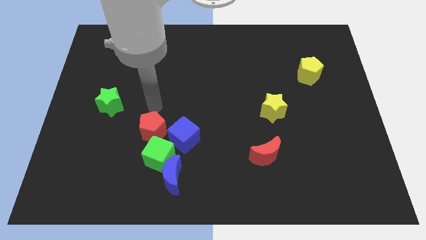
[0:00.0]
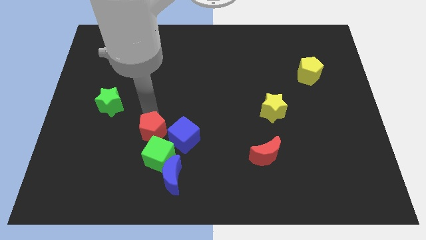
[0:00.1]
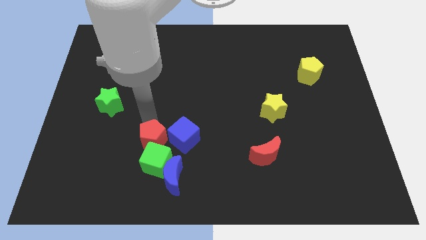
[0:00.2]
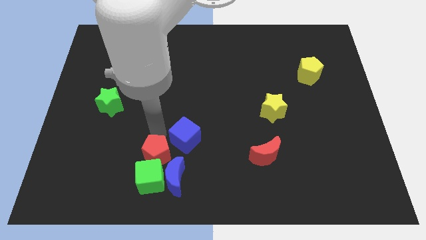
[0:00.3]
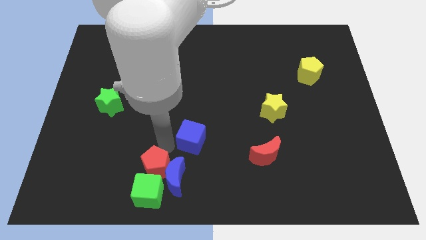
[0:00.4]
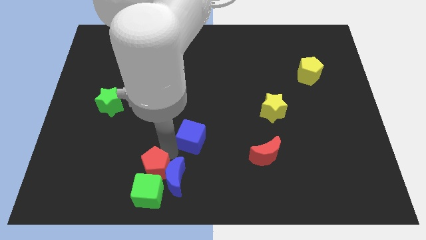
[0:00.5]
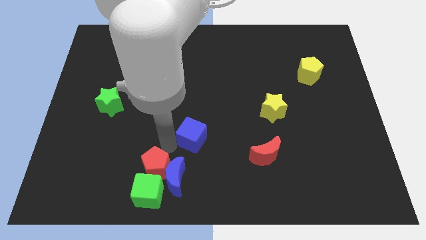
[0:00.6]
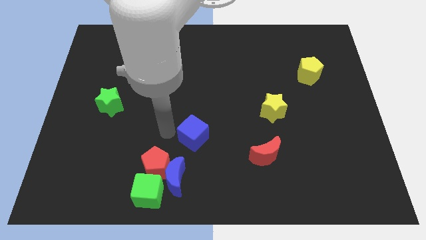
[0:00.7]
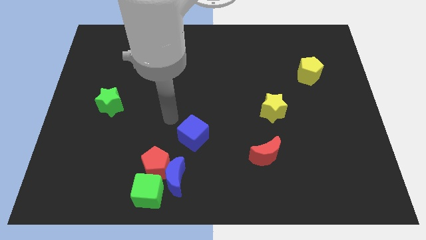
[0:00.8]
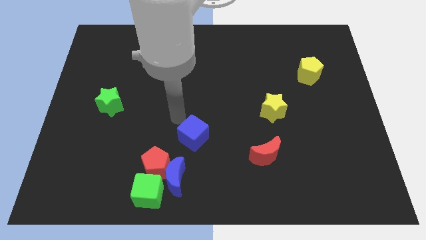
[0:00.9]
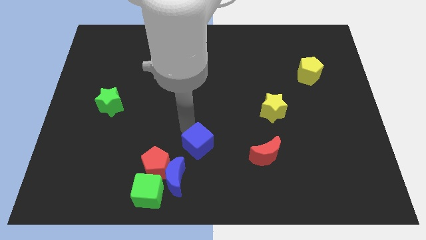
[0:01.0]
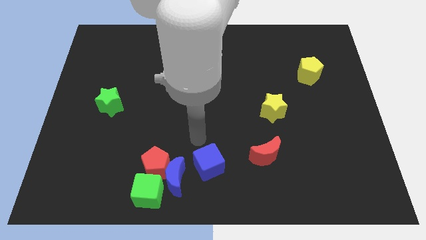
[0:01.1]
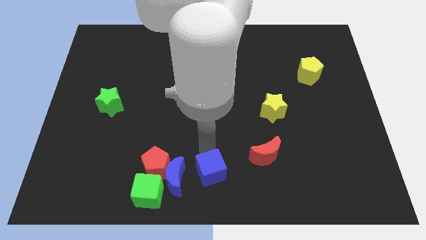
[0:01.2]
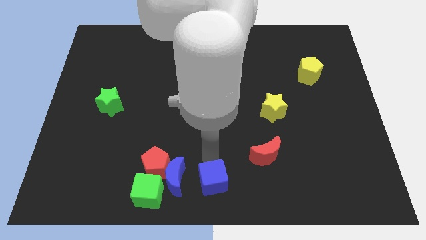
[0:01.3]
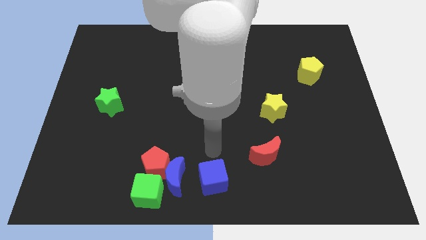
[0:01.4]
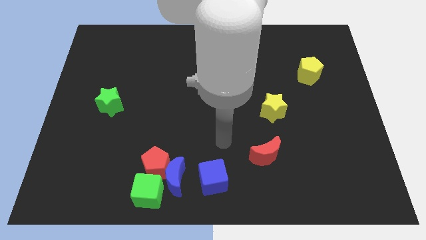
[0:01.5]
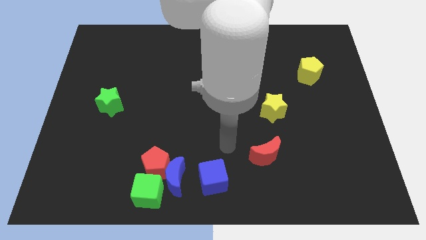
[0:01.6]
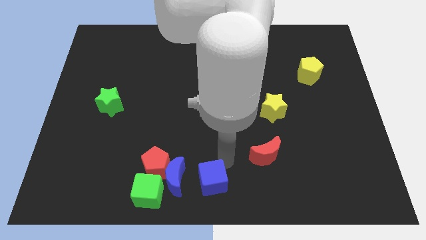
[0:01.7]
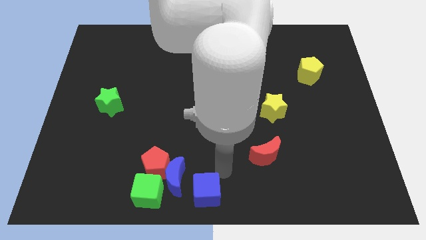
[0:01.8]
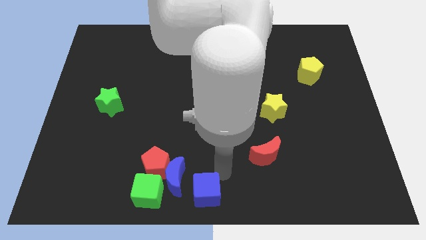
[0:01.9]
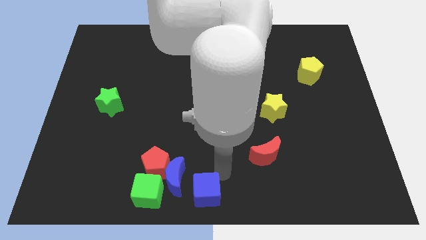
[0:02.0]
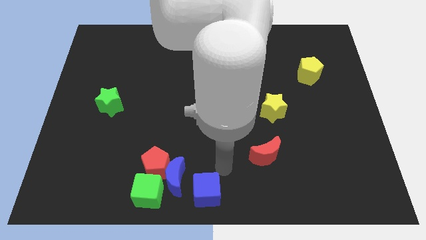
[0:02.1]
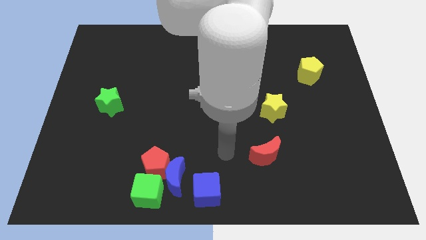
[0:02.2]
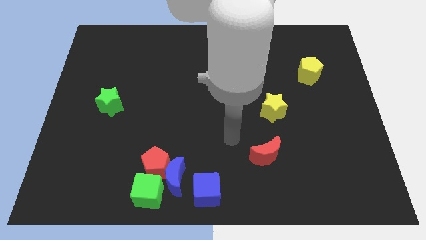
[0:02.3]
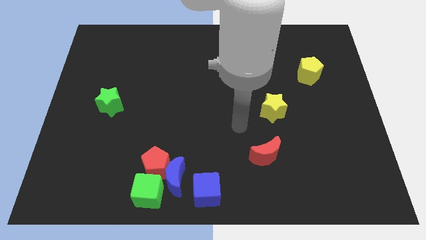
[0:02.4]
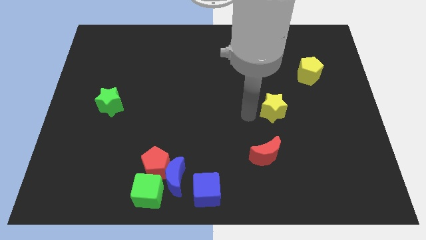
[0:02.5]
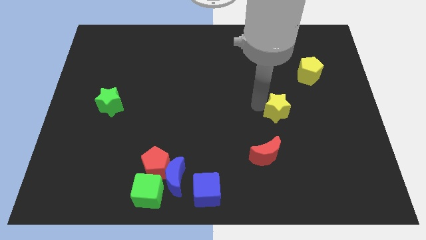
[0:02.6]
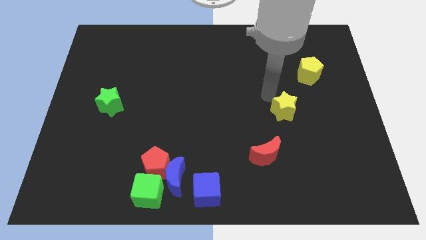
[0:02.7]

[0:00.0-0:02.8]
drag the blue cube to the bottom center

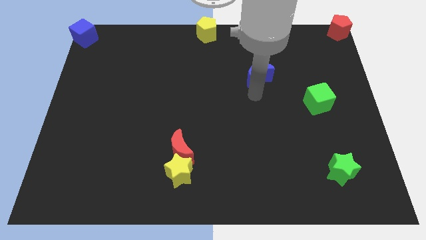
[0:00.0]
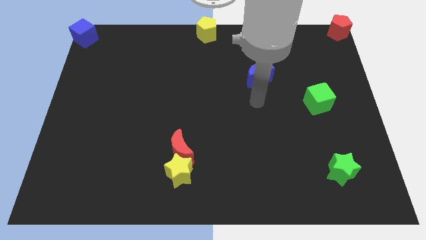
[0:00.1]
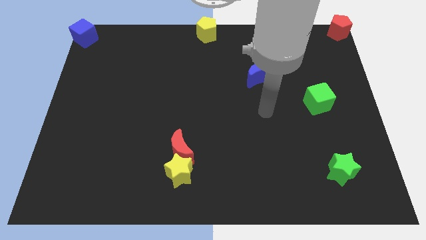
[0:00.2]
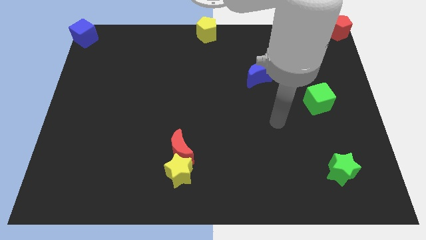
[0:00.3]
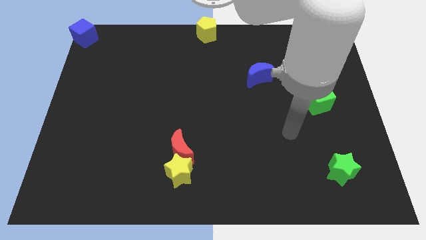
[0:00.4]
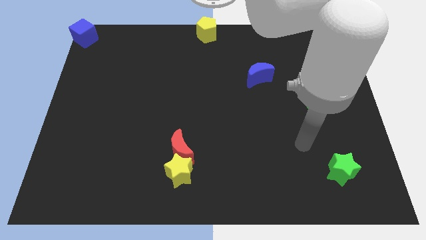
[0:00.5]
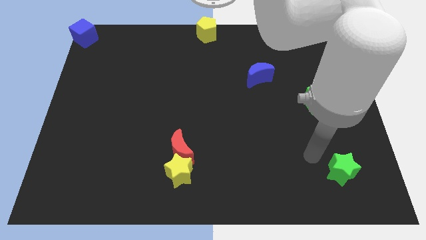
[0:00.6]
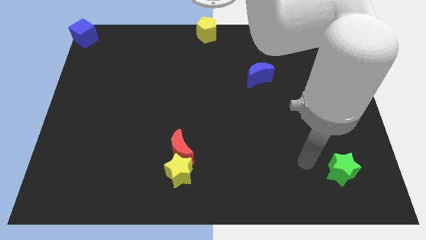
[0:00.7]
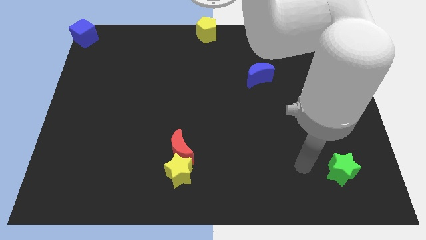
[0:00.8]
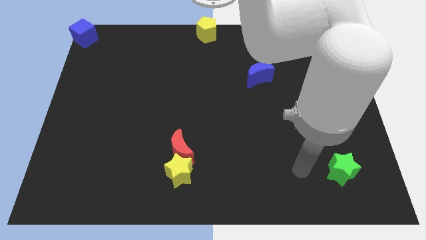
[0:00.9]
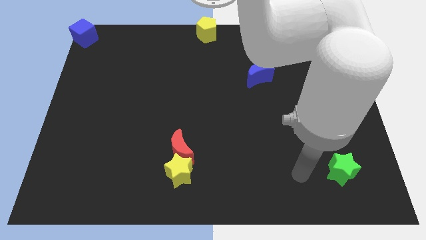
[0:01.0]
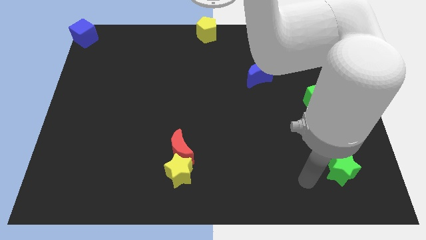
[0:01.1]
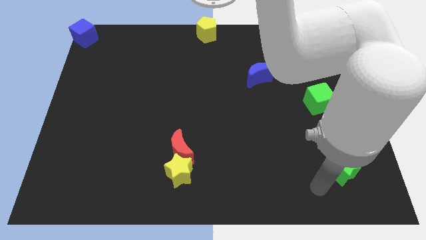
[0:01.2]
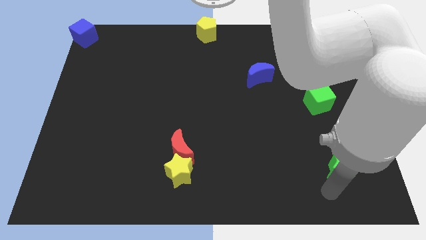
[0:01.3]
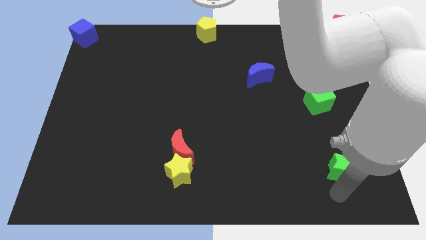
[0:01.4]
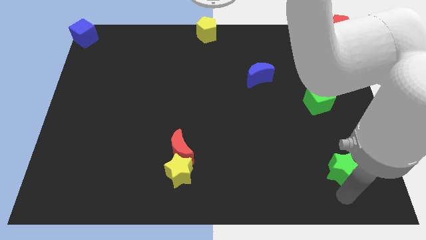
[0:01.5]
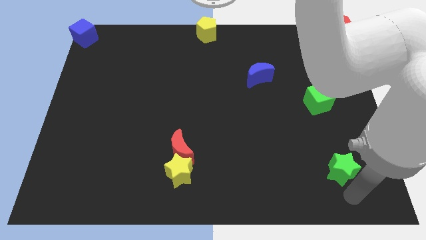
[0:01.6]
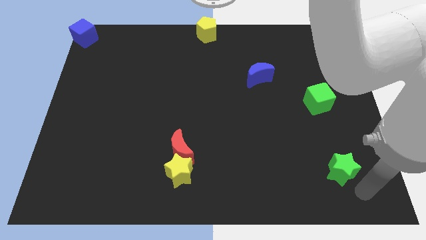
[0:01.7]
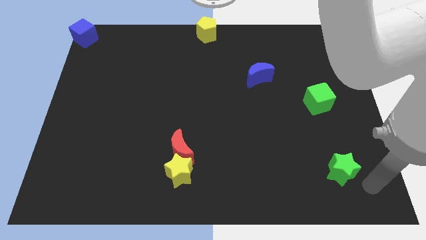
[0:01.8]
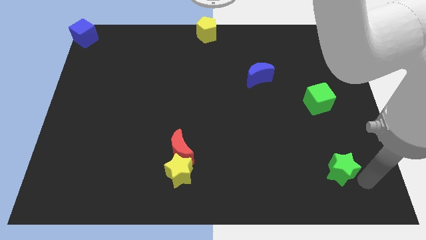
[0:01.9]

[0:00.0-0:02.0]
move your arm away from the blue moon

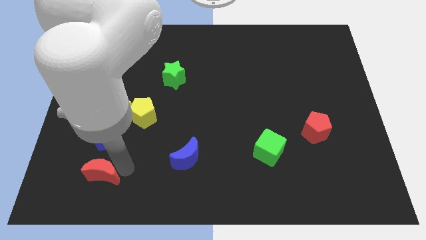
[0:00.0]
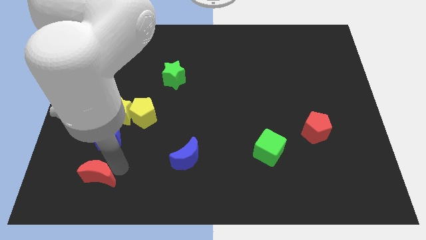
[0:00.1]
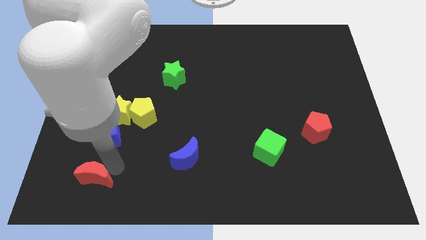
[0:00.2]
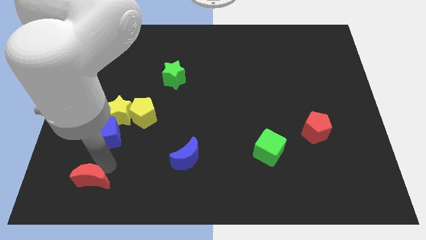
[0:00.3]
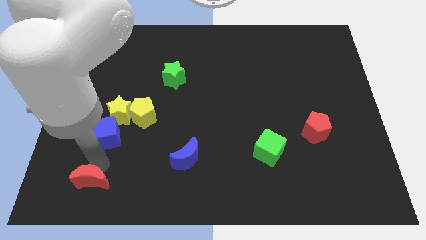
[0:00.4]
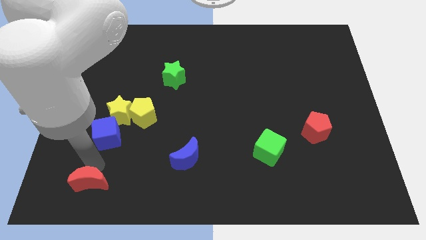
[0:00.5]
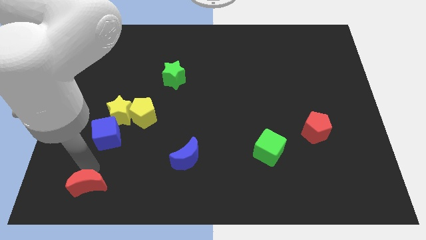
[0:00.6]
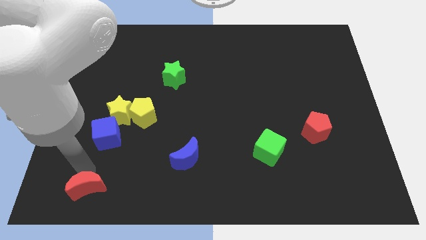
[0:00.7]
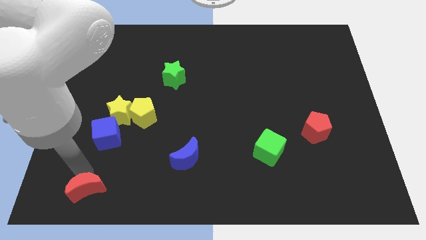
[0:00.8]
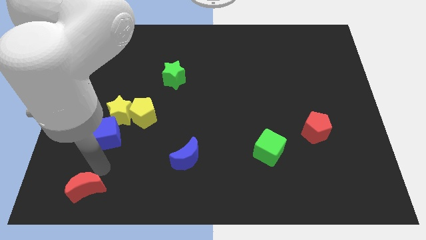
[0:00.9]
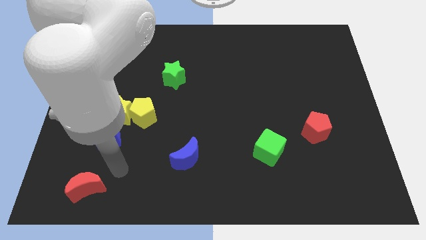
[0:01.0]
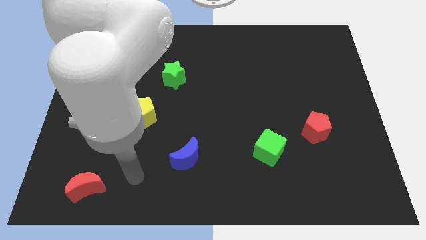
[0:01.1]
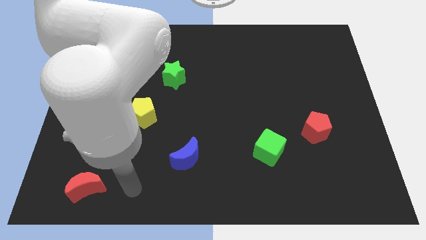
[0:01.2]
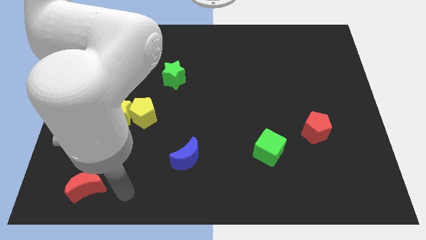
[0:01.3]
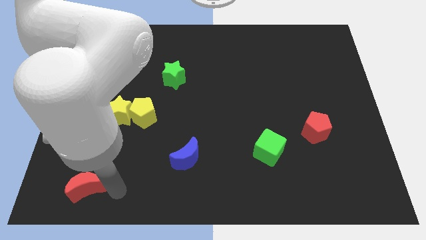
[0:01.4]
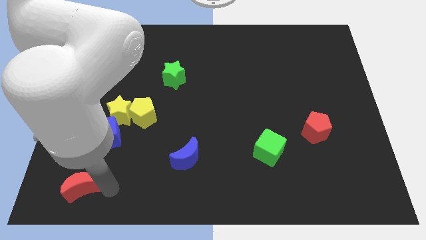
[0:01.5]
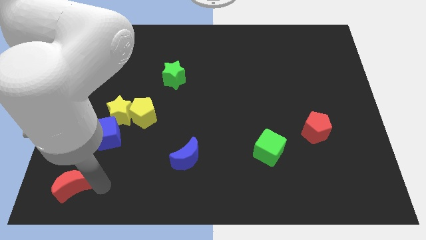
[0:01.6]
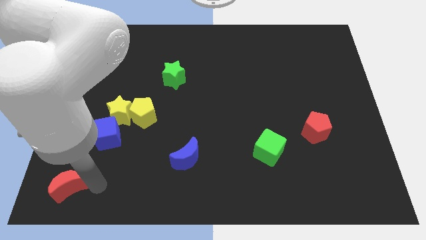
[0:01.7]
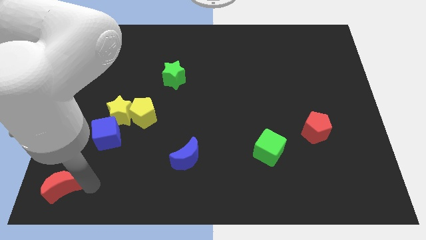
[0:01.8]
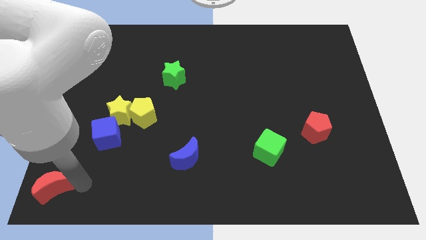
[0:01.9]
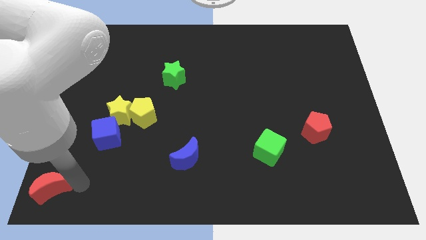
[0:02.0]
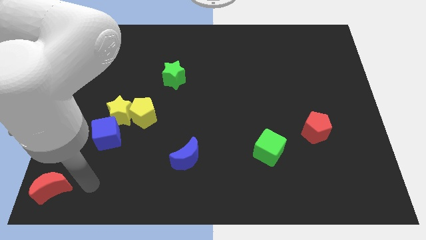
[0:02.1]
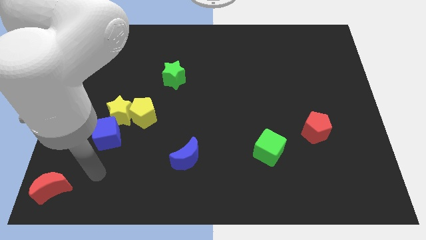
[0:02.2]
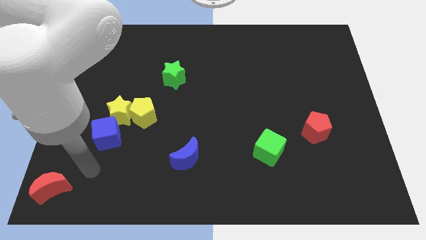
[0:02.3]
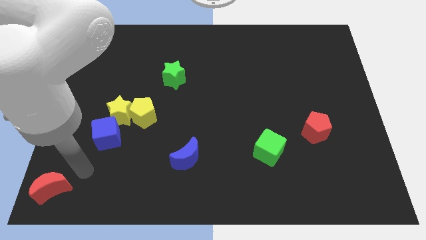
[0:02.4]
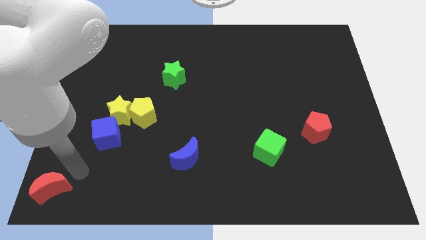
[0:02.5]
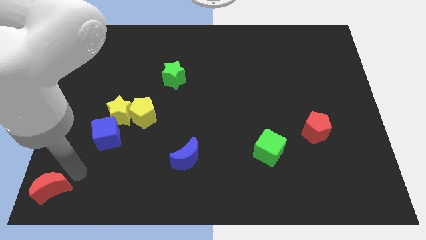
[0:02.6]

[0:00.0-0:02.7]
move the red moon to the bottom left

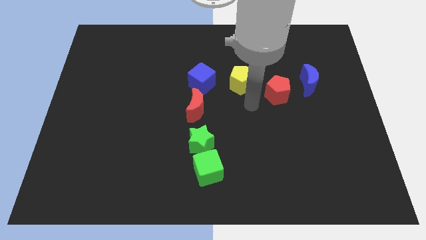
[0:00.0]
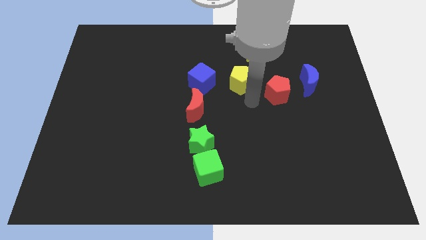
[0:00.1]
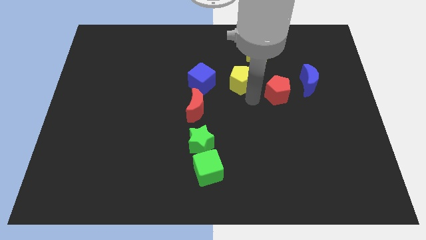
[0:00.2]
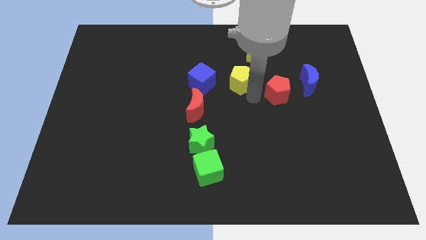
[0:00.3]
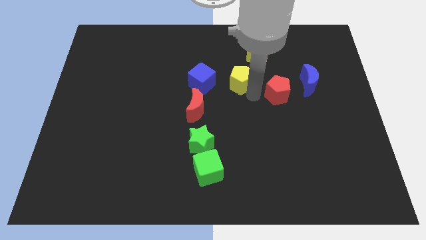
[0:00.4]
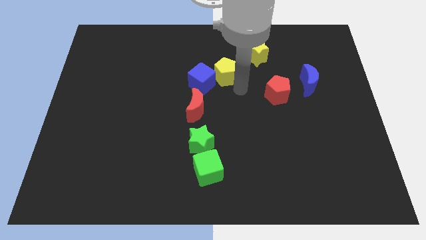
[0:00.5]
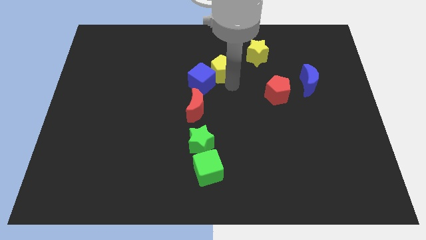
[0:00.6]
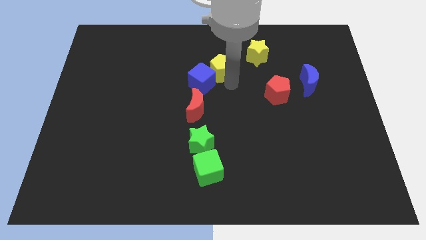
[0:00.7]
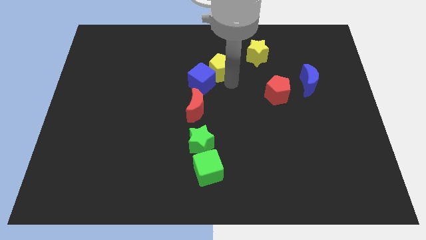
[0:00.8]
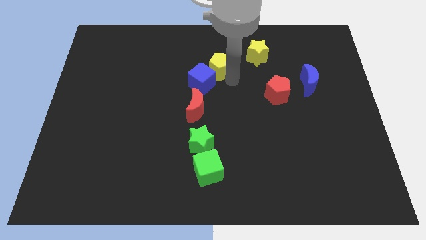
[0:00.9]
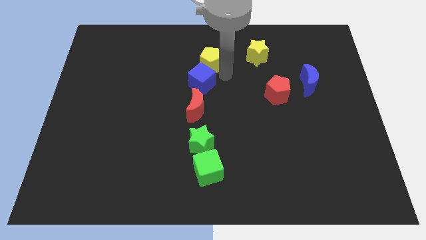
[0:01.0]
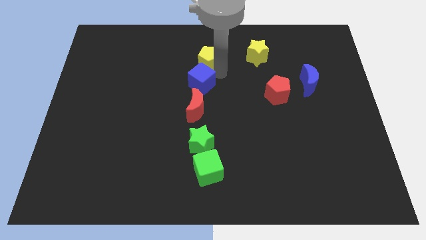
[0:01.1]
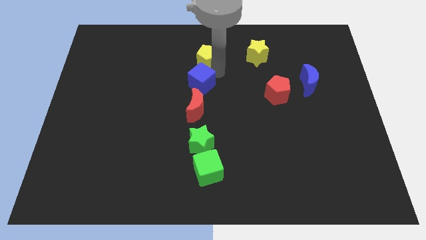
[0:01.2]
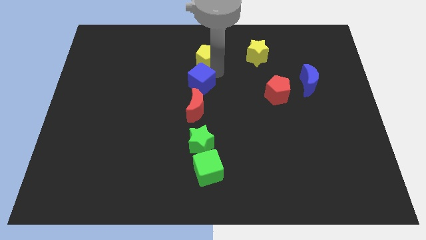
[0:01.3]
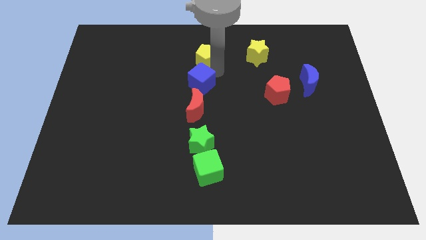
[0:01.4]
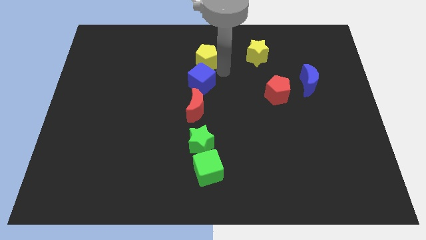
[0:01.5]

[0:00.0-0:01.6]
push the yellow pentagon to the top of the blue cube
